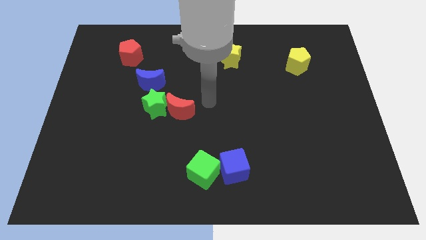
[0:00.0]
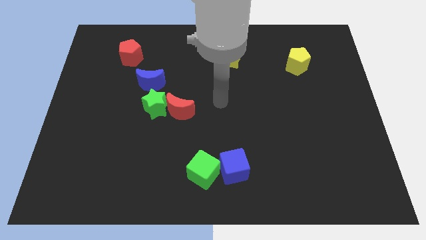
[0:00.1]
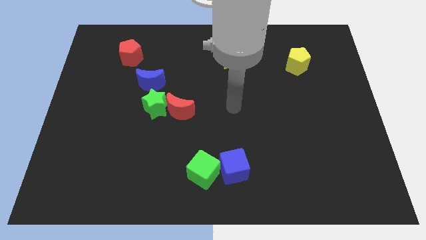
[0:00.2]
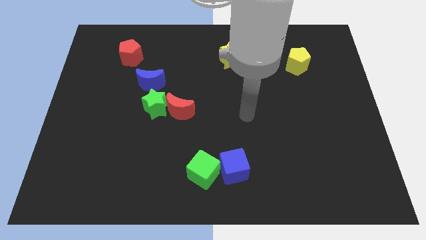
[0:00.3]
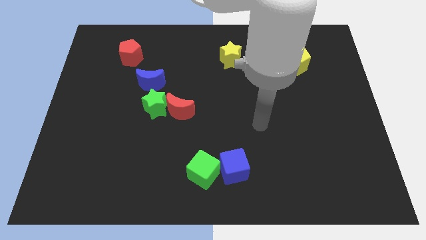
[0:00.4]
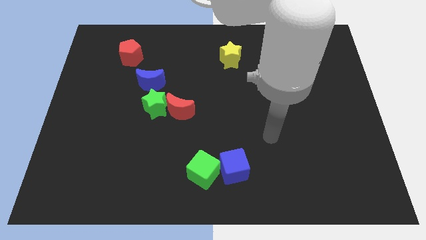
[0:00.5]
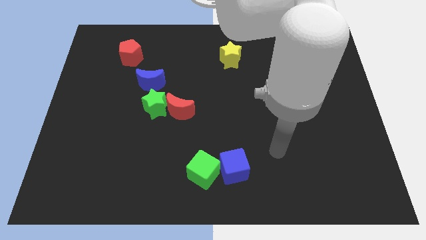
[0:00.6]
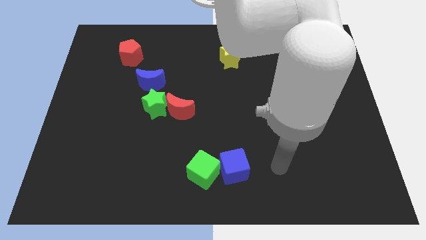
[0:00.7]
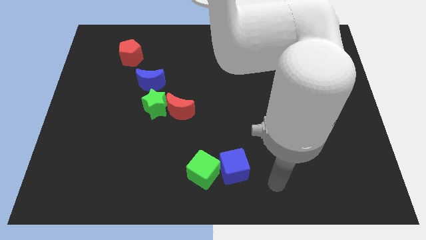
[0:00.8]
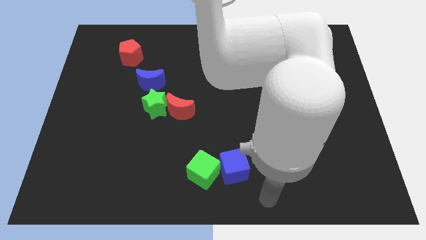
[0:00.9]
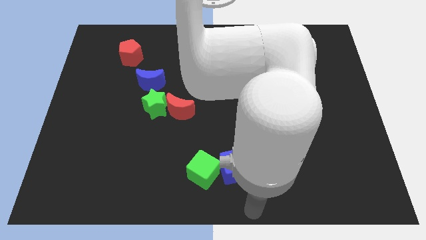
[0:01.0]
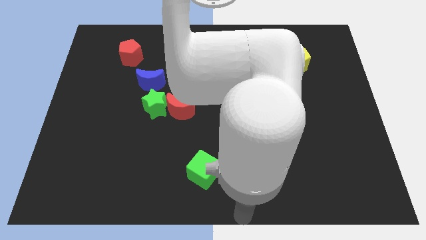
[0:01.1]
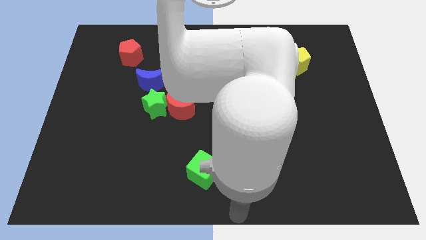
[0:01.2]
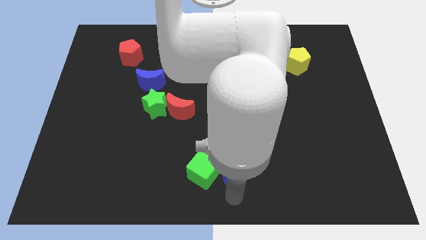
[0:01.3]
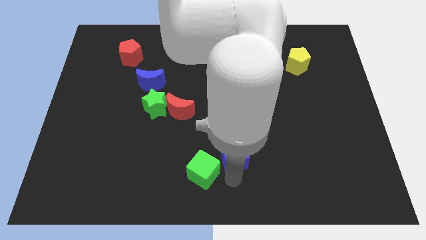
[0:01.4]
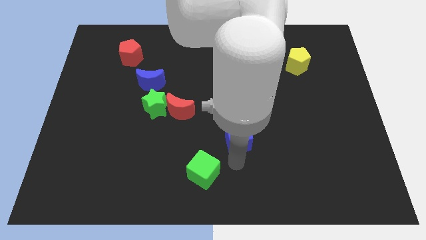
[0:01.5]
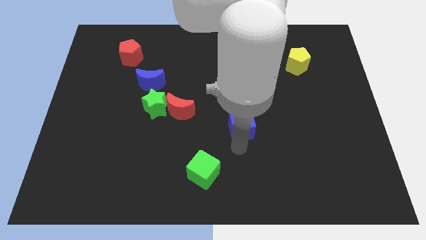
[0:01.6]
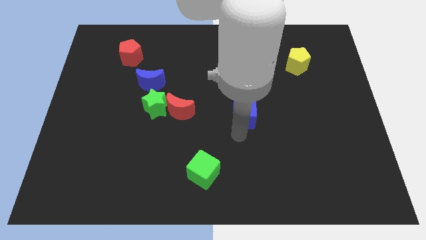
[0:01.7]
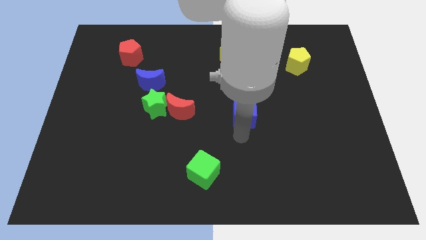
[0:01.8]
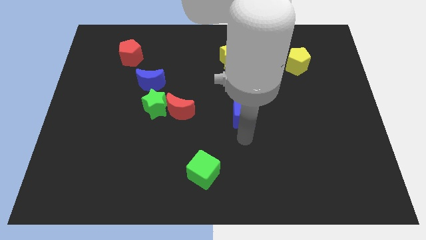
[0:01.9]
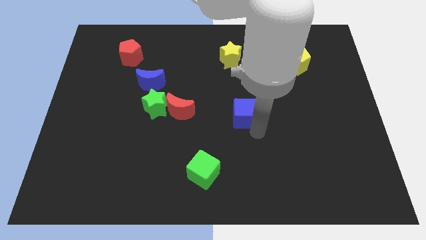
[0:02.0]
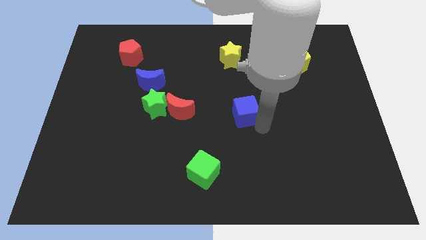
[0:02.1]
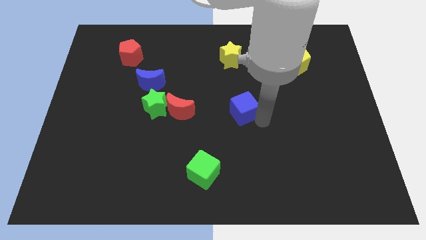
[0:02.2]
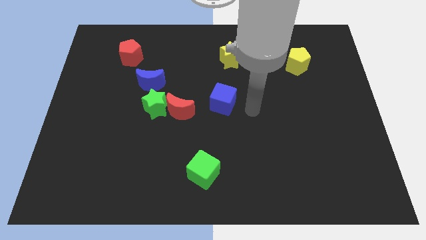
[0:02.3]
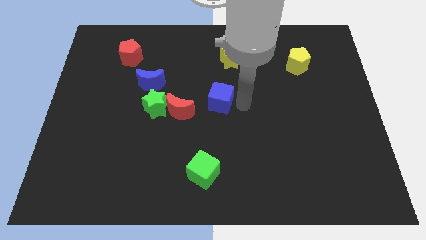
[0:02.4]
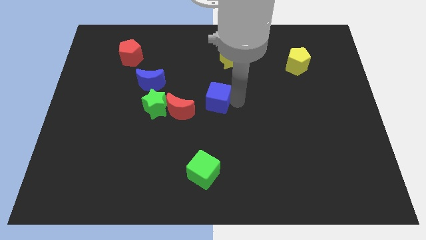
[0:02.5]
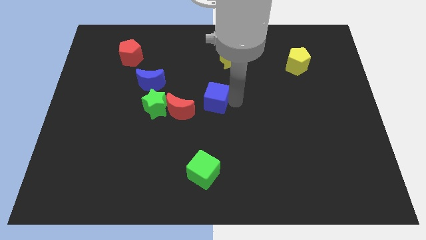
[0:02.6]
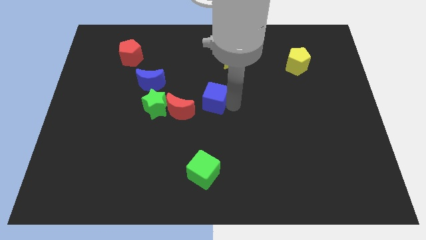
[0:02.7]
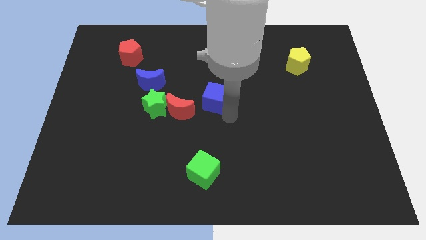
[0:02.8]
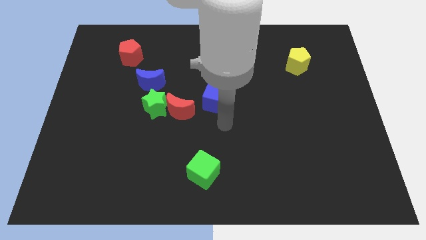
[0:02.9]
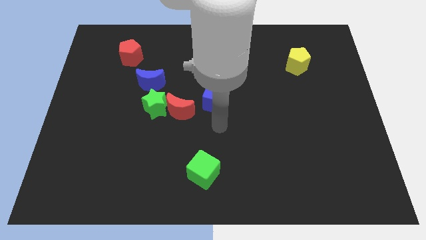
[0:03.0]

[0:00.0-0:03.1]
place the blue cube right to the red moon

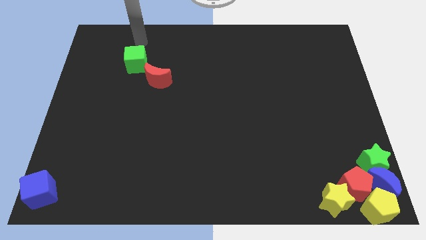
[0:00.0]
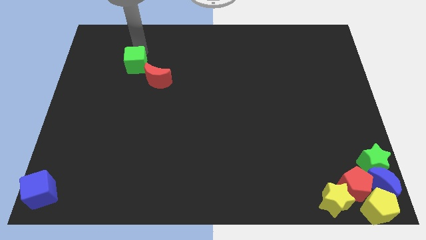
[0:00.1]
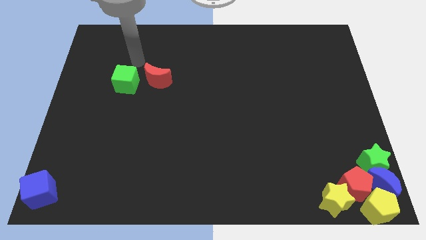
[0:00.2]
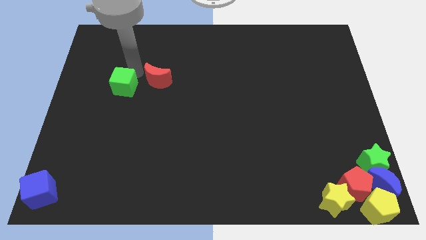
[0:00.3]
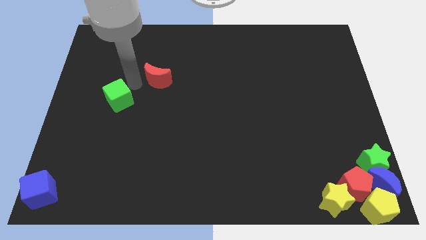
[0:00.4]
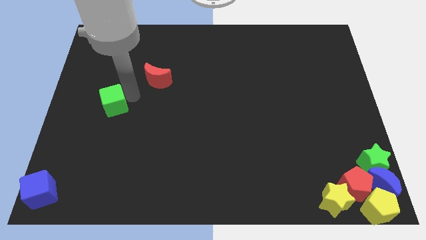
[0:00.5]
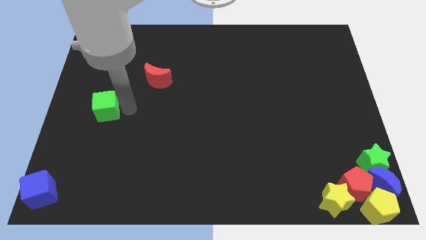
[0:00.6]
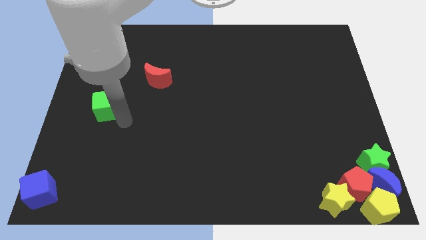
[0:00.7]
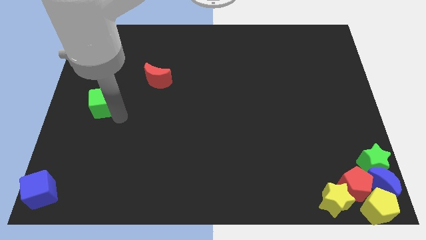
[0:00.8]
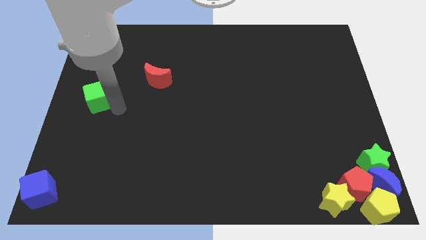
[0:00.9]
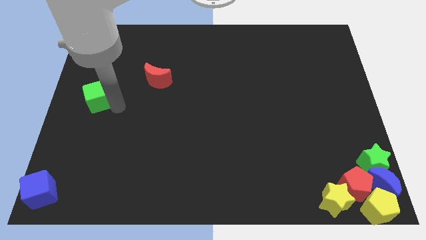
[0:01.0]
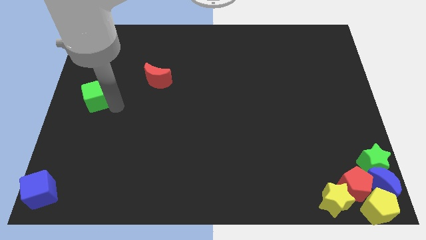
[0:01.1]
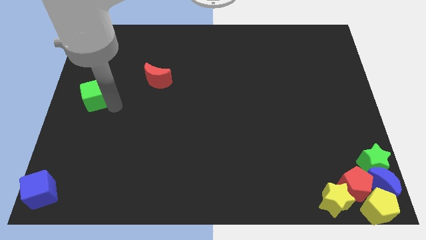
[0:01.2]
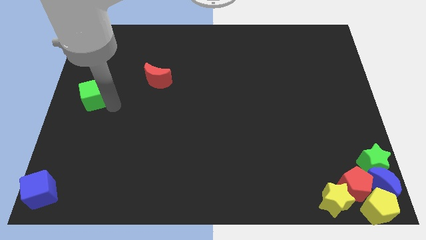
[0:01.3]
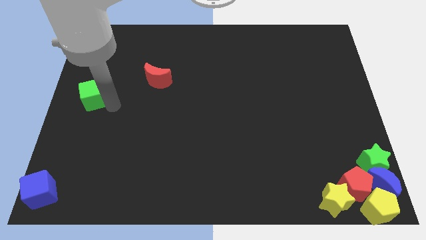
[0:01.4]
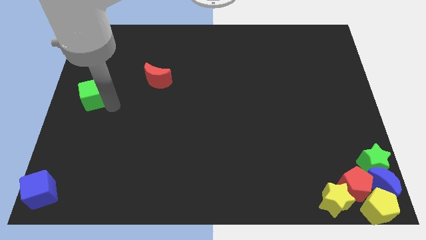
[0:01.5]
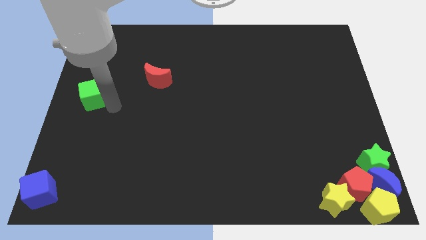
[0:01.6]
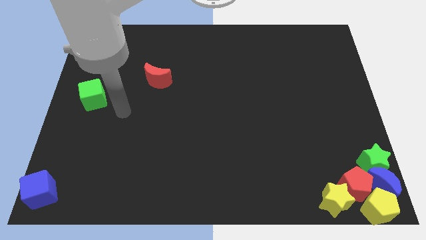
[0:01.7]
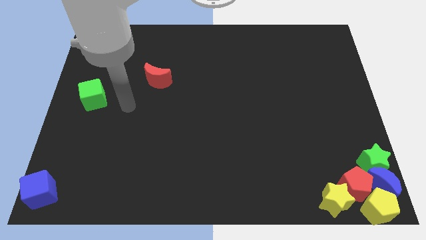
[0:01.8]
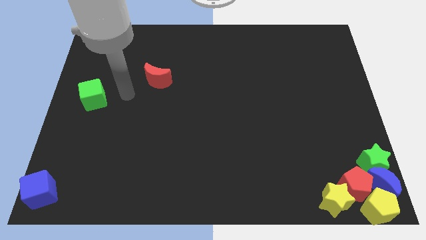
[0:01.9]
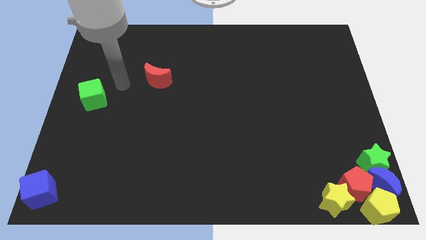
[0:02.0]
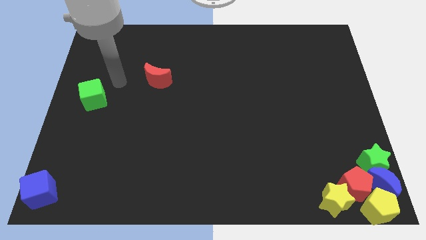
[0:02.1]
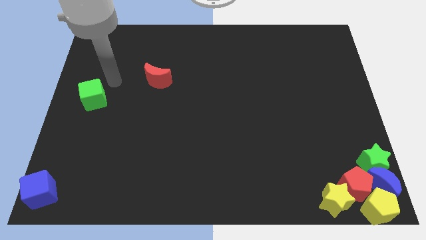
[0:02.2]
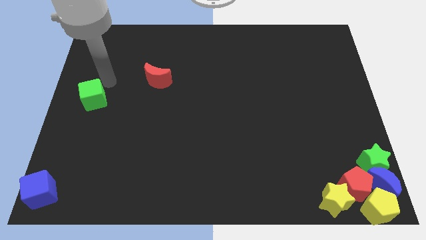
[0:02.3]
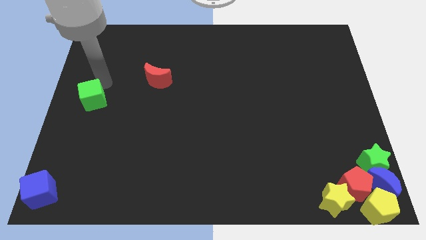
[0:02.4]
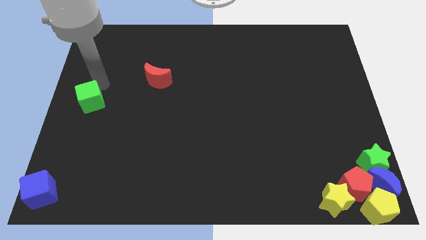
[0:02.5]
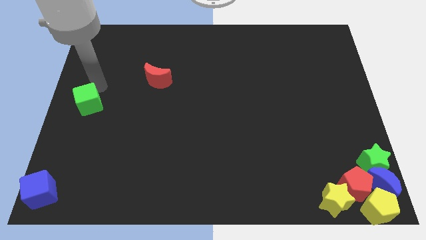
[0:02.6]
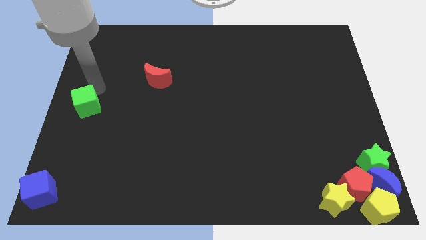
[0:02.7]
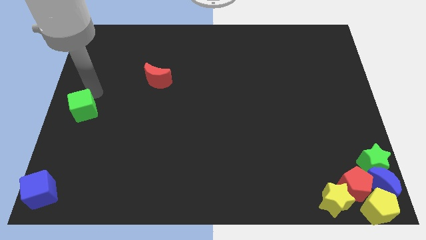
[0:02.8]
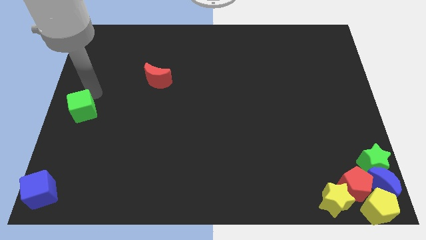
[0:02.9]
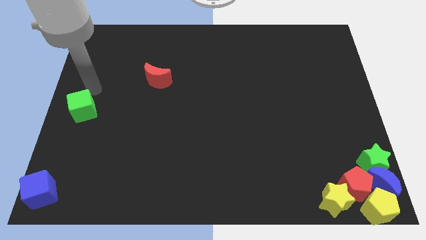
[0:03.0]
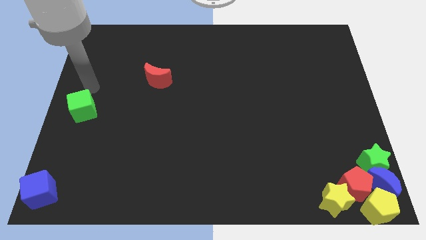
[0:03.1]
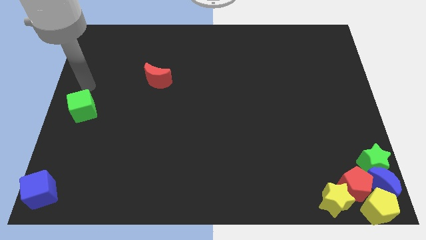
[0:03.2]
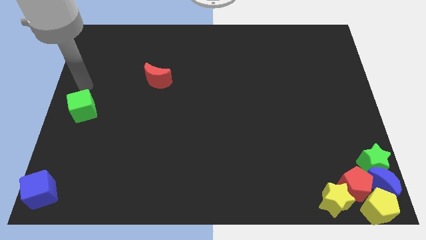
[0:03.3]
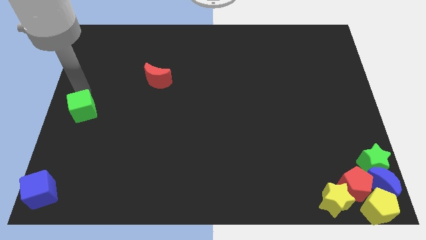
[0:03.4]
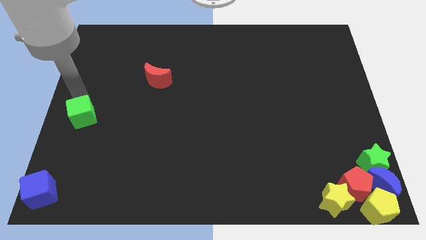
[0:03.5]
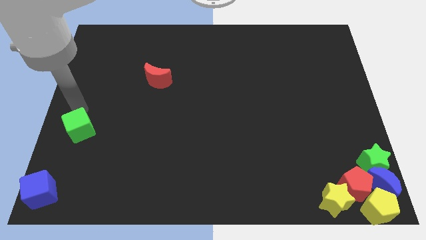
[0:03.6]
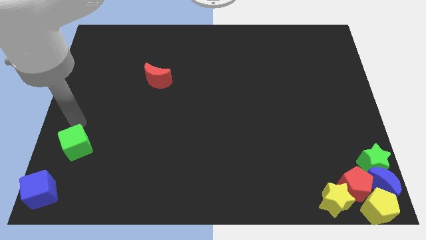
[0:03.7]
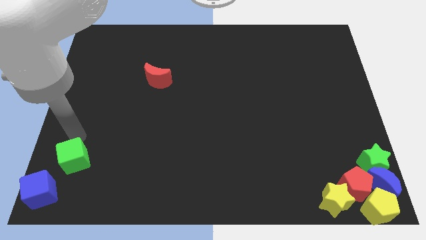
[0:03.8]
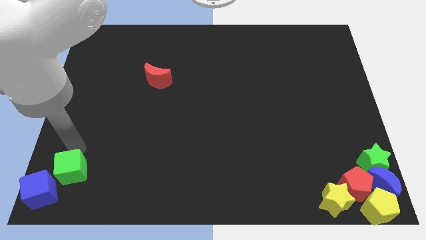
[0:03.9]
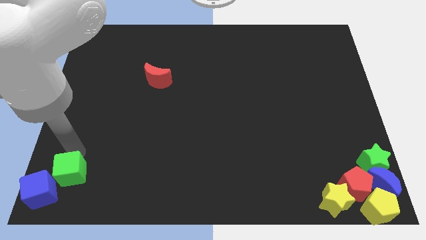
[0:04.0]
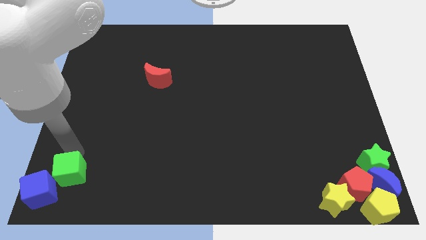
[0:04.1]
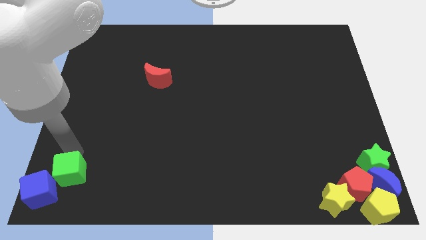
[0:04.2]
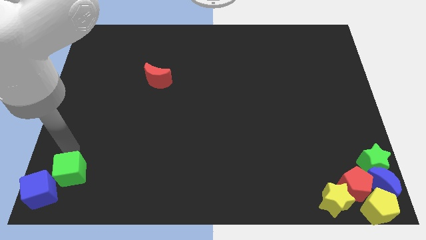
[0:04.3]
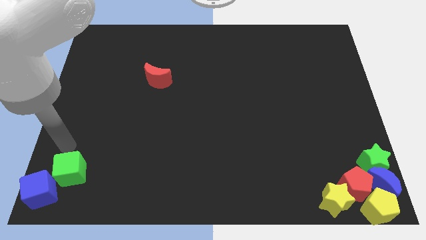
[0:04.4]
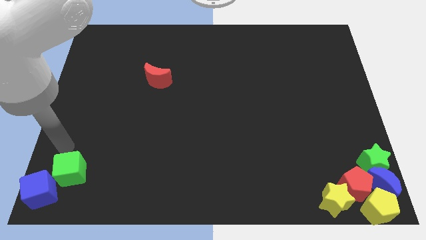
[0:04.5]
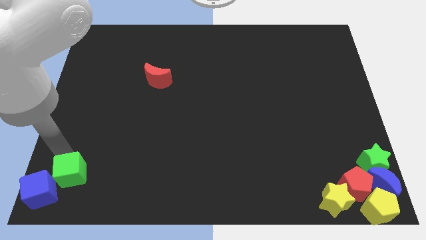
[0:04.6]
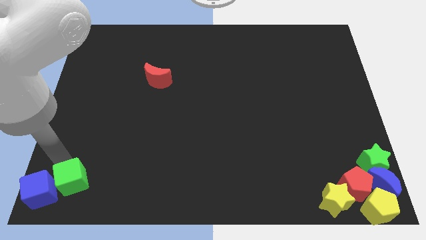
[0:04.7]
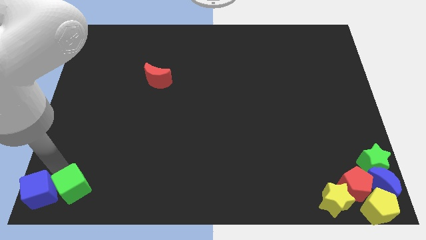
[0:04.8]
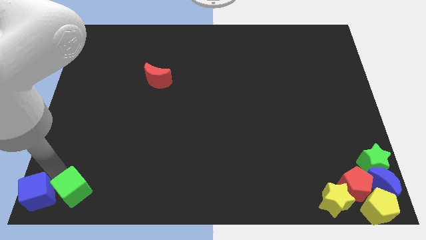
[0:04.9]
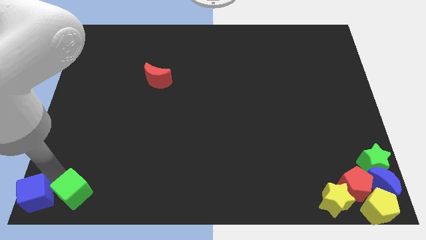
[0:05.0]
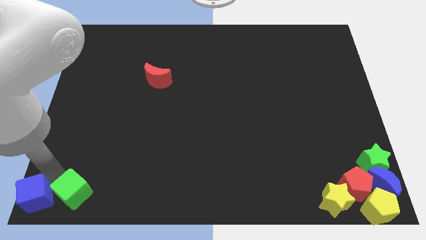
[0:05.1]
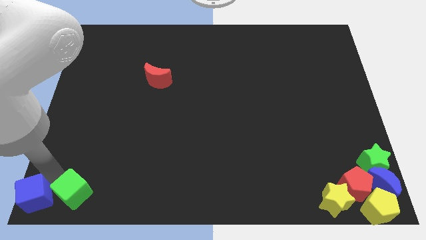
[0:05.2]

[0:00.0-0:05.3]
push the green cube to the right side of the blue cube

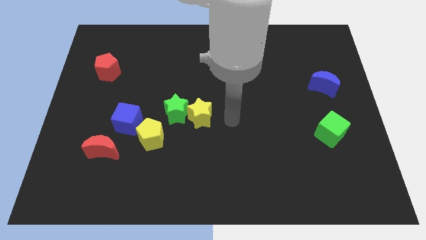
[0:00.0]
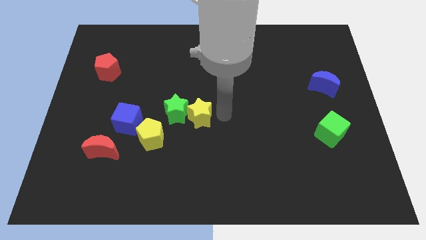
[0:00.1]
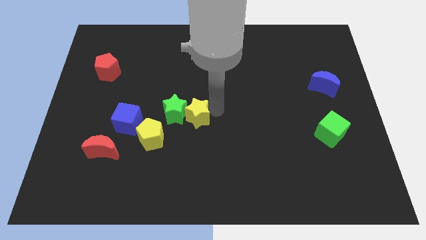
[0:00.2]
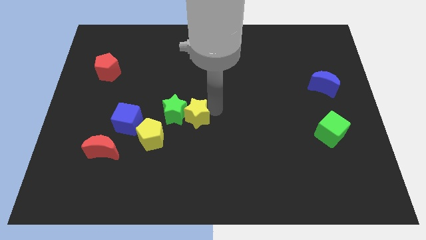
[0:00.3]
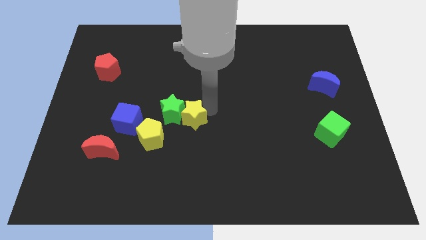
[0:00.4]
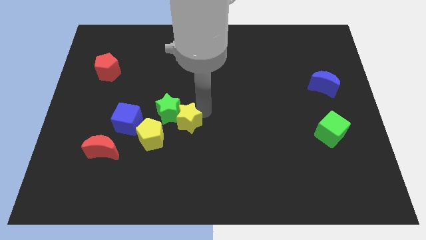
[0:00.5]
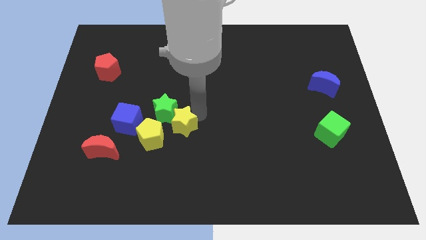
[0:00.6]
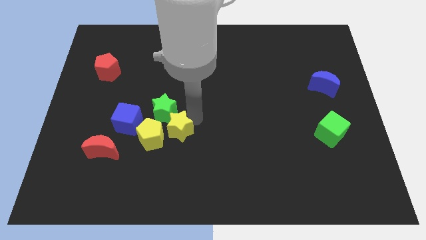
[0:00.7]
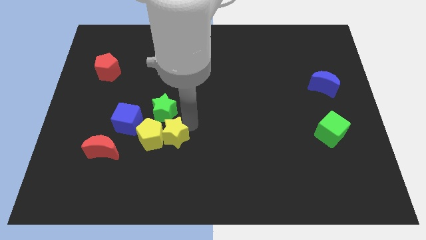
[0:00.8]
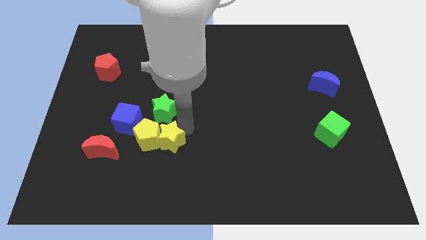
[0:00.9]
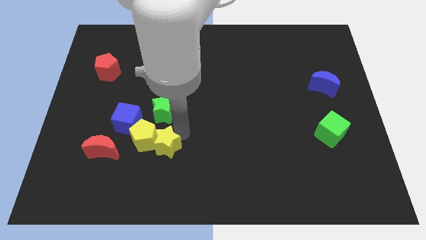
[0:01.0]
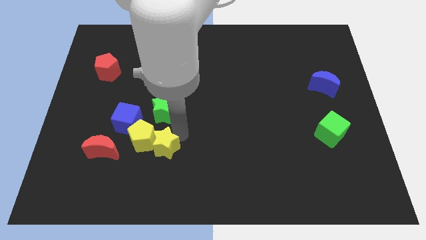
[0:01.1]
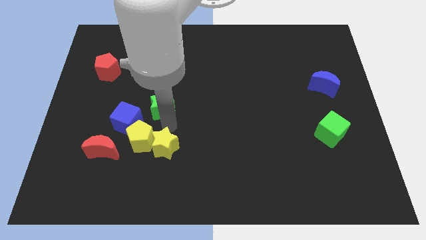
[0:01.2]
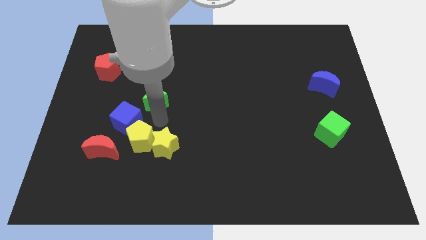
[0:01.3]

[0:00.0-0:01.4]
push the yellow star into the yellow pentagon
